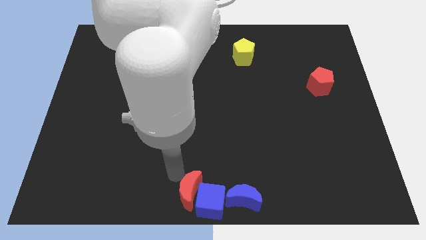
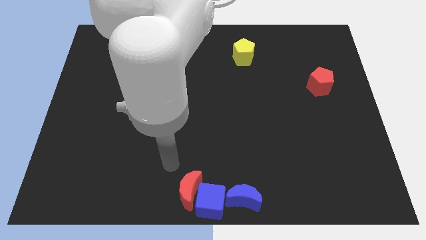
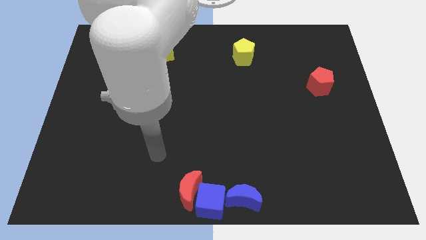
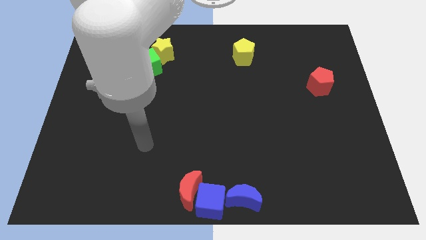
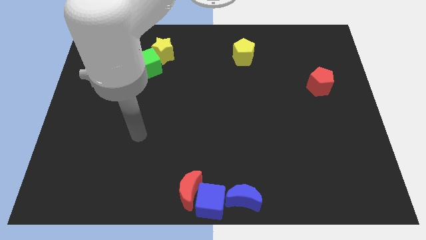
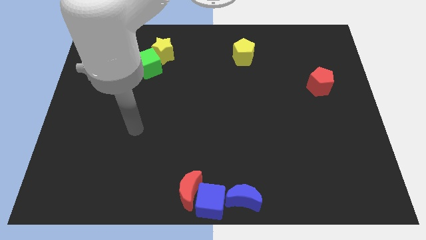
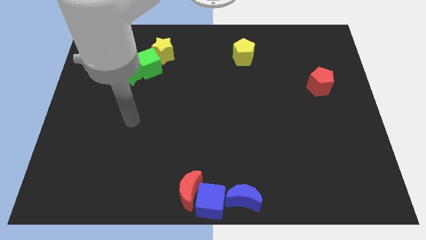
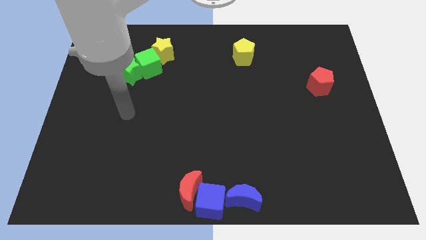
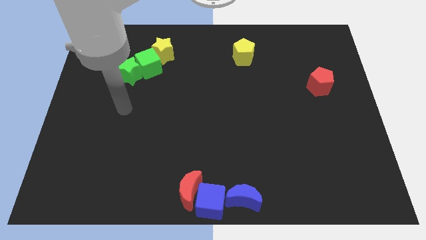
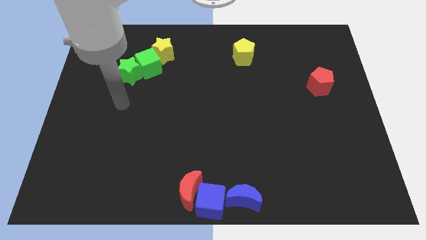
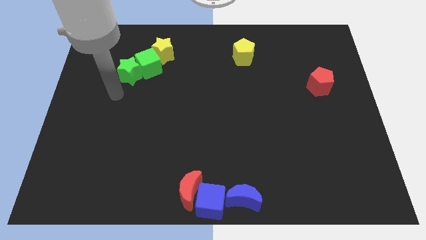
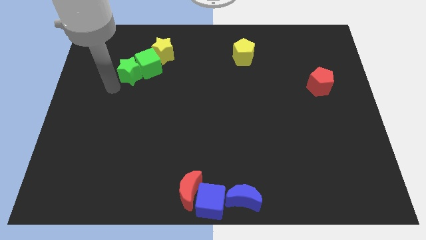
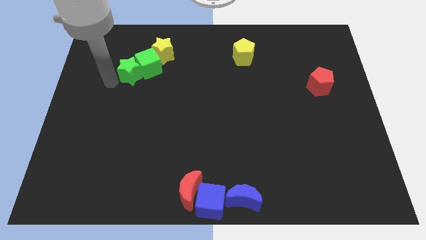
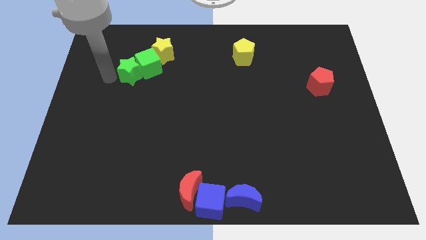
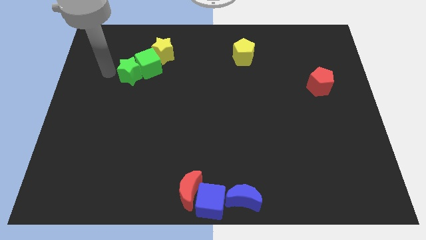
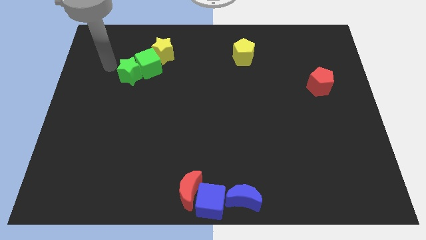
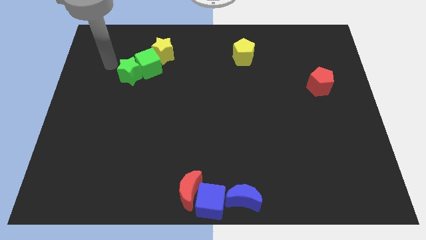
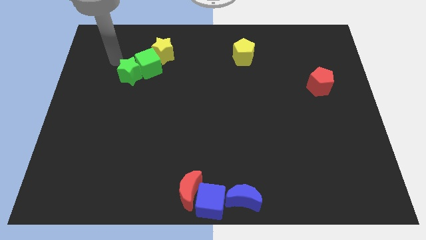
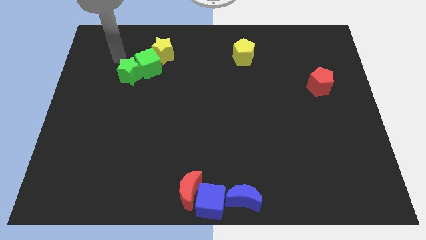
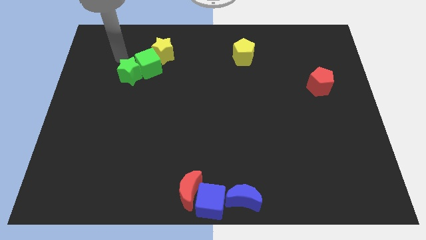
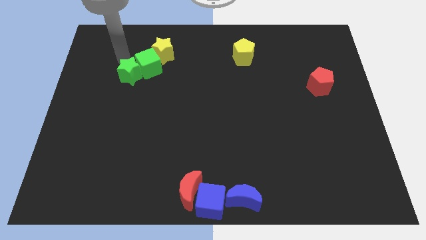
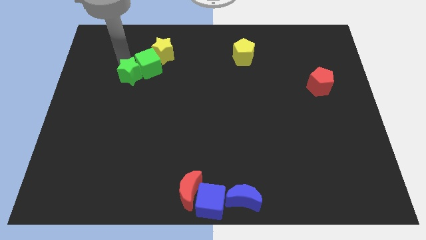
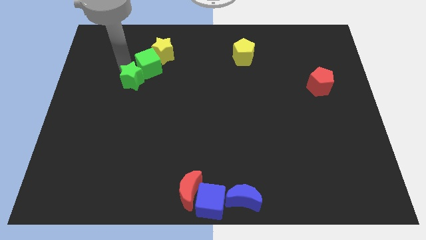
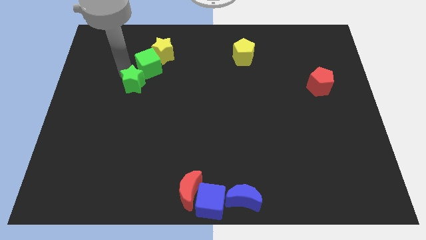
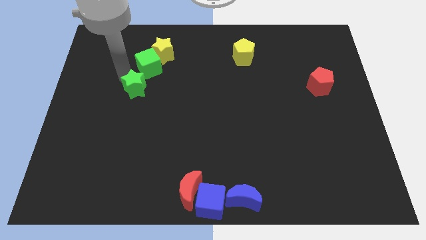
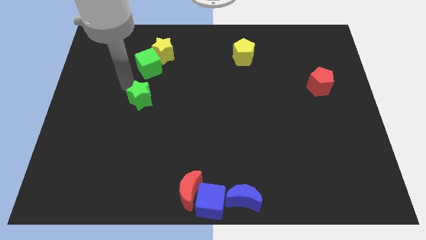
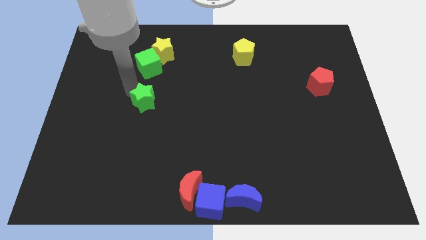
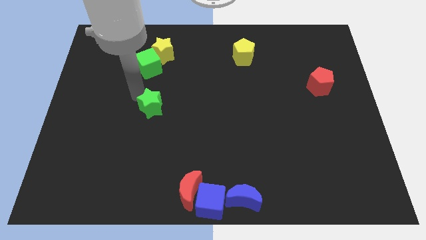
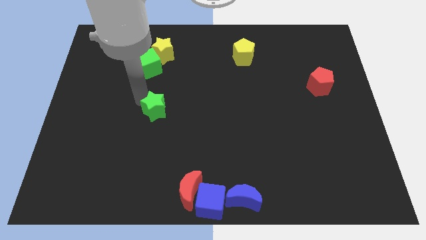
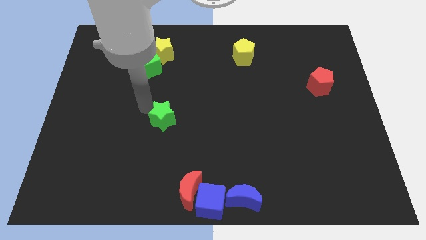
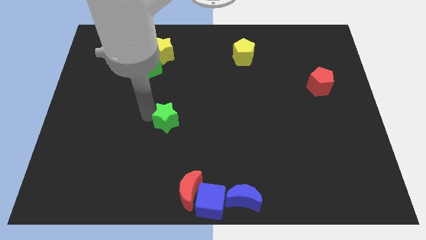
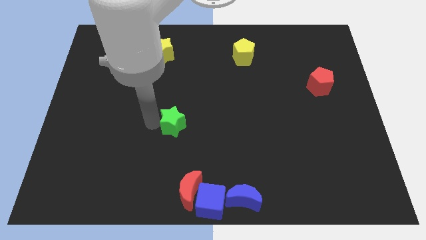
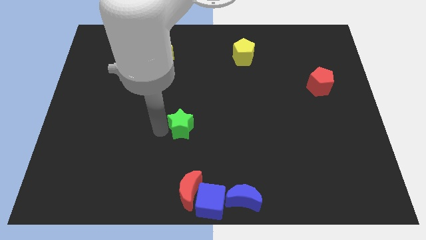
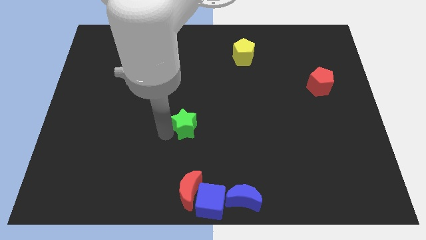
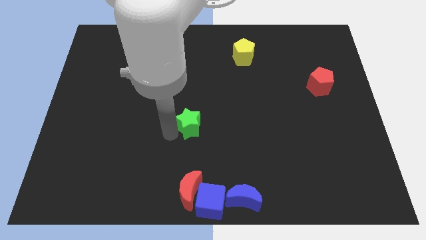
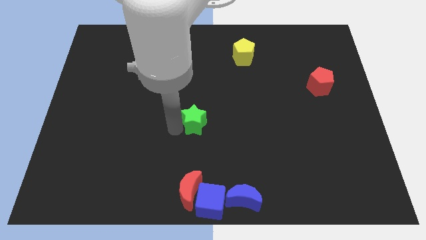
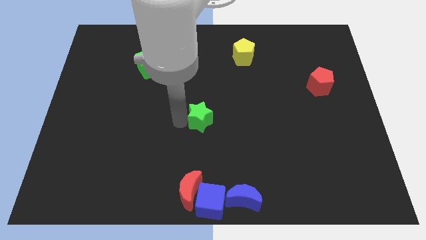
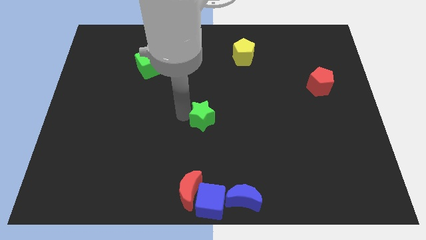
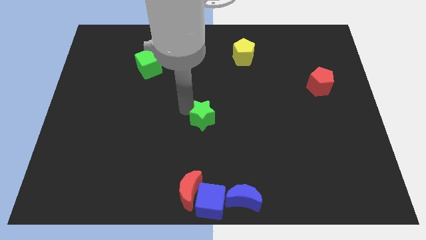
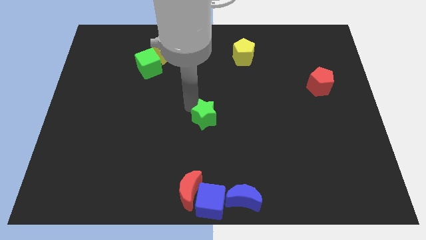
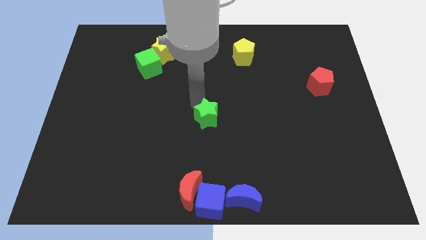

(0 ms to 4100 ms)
push the green star towards the center of the board

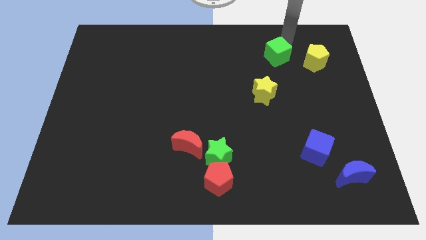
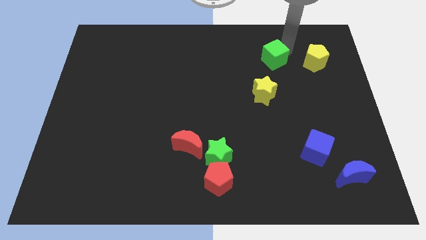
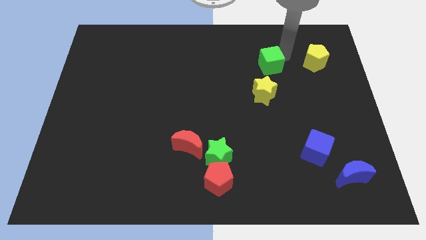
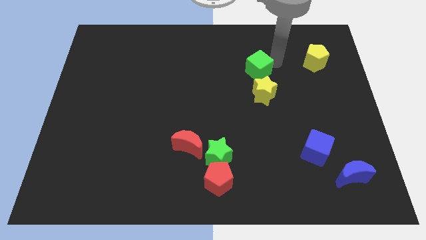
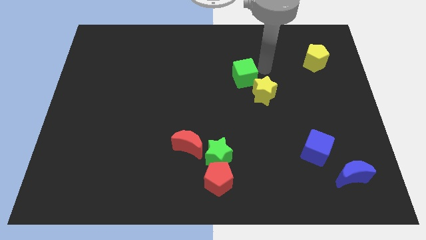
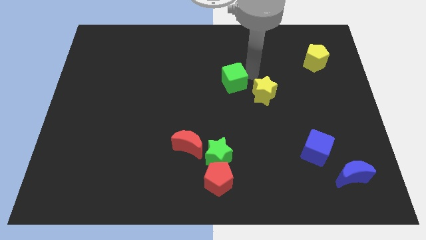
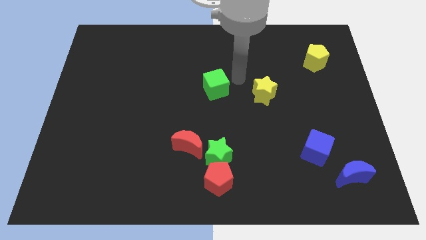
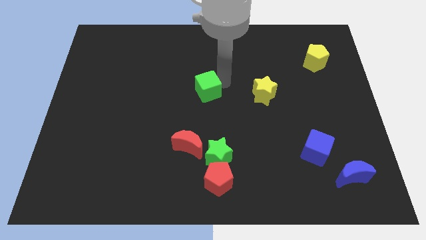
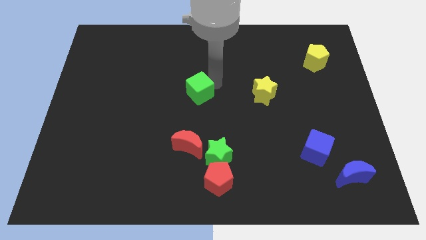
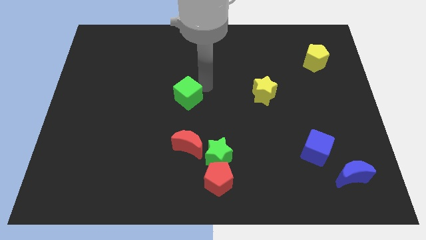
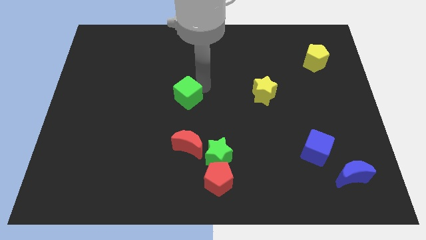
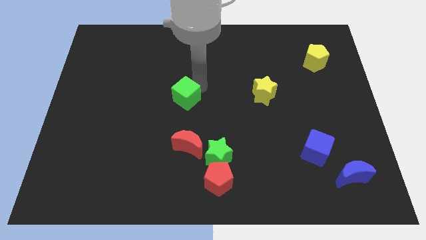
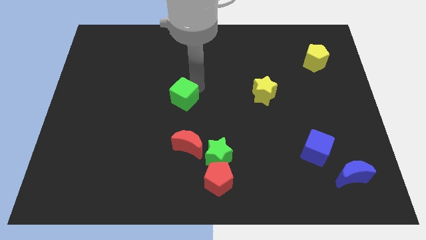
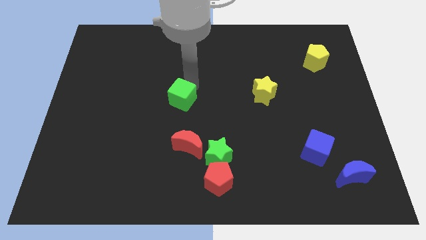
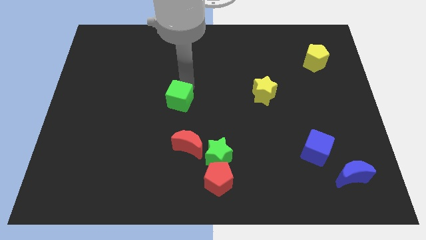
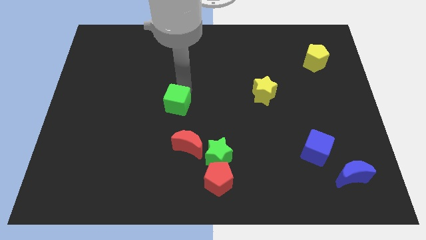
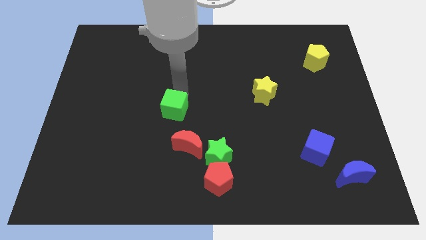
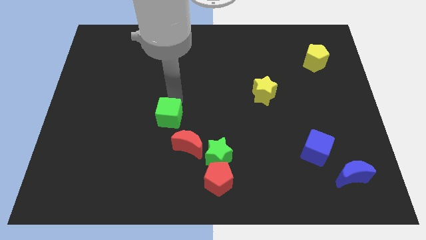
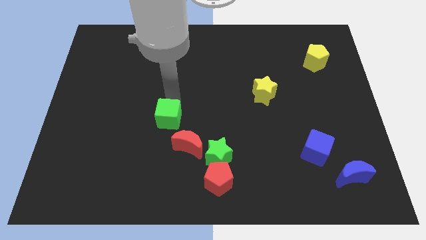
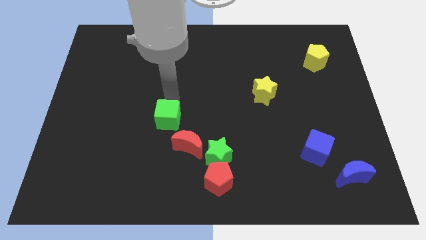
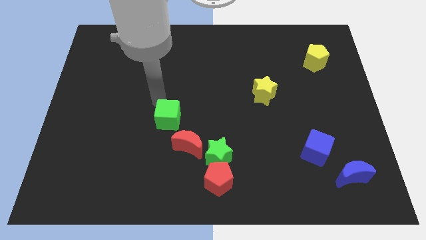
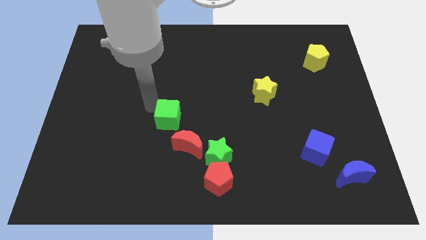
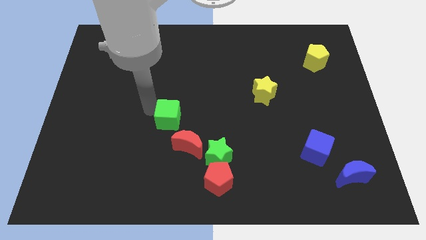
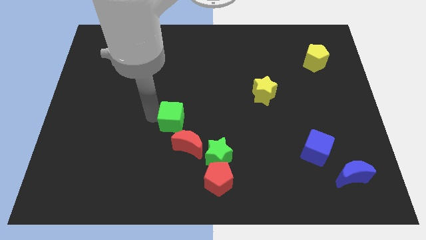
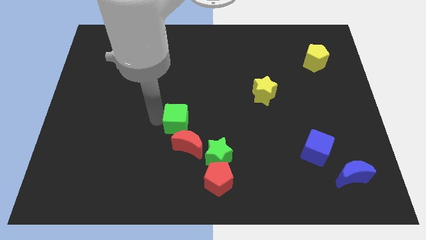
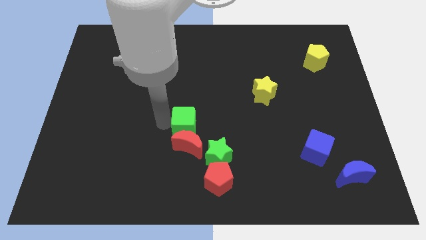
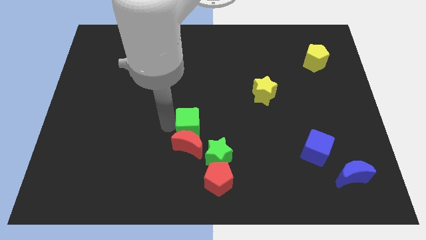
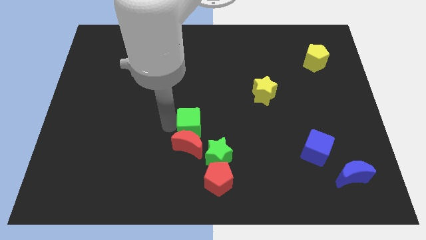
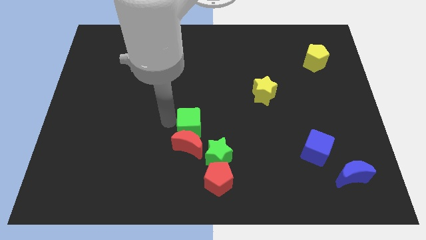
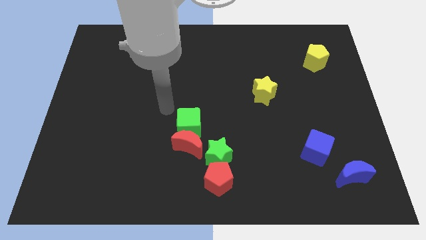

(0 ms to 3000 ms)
move the green cube at the top of the red moon

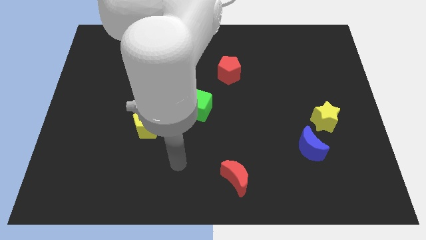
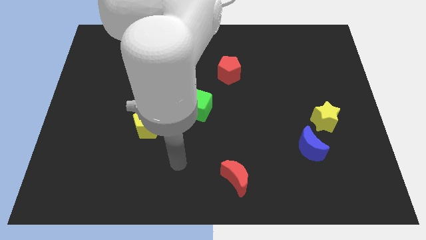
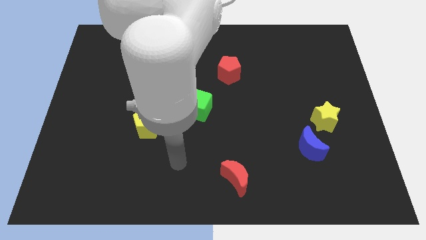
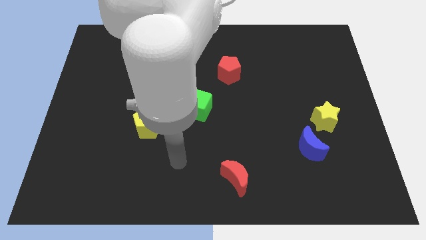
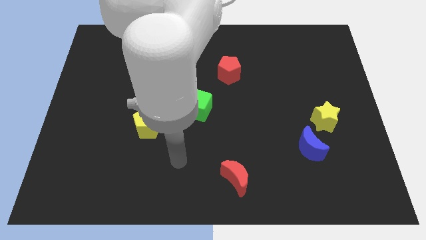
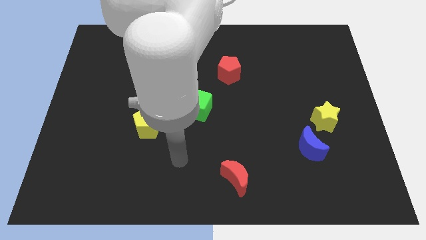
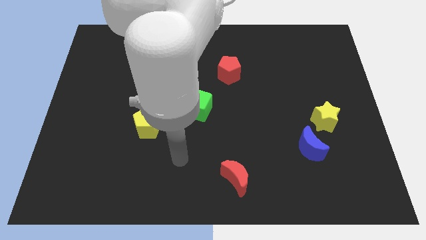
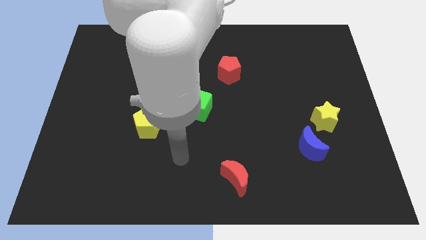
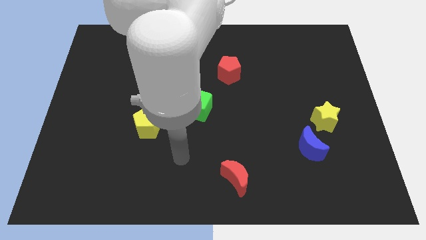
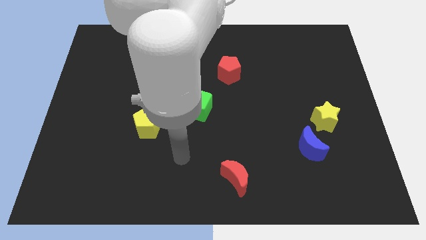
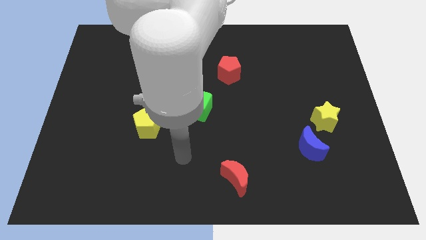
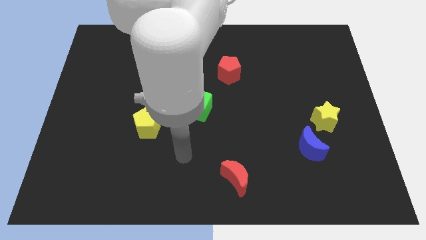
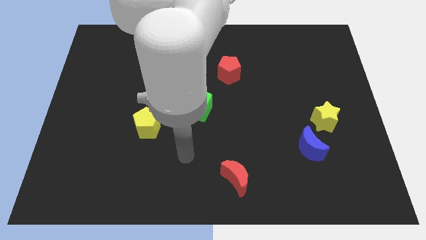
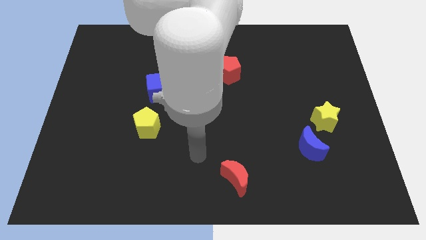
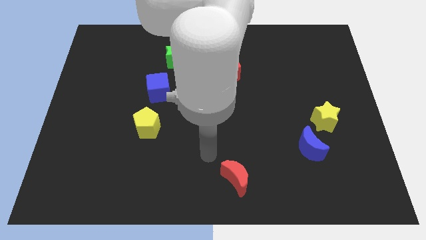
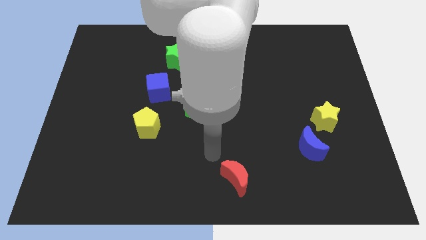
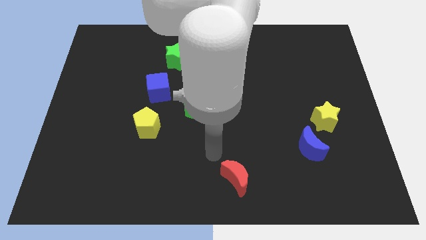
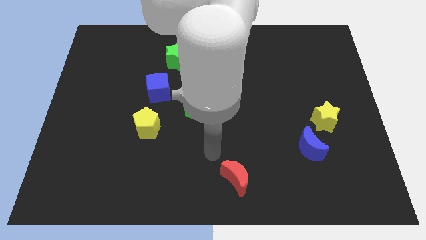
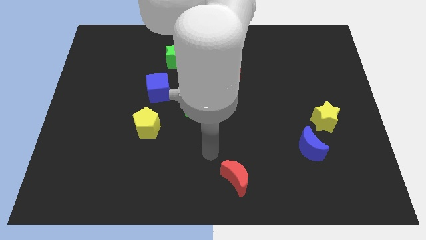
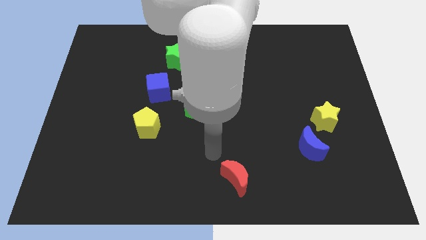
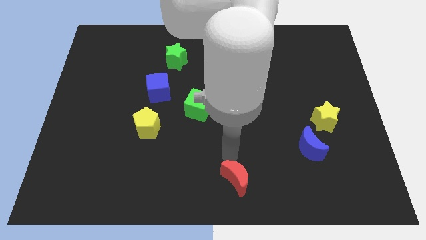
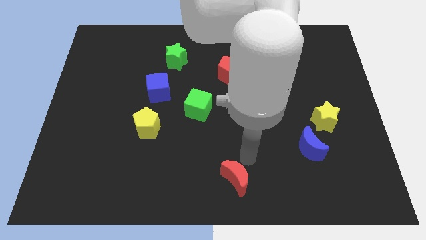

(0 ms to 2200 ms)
place arm above red moon
